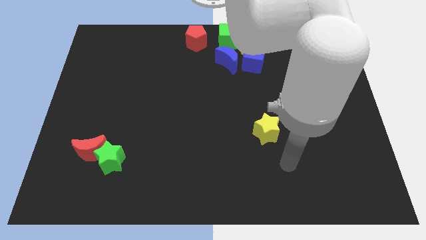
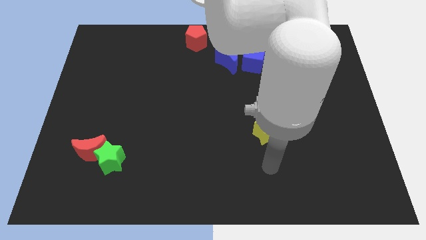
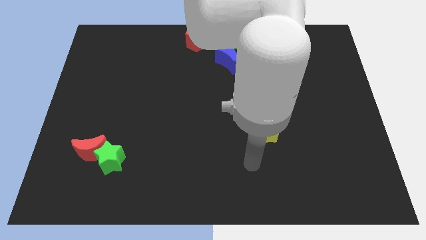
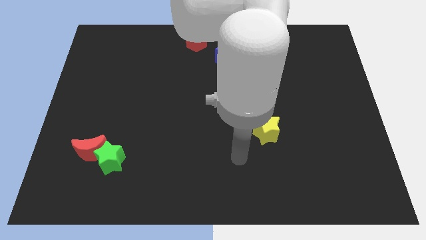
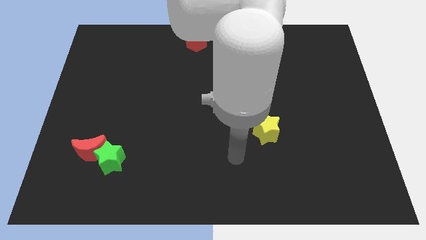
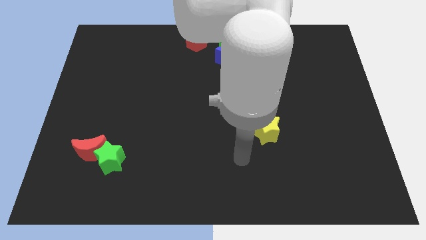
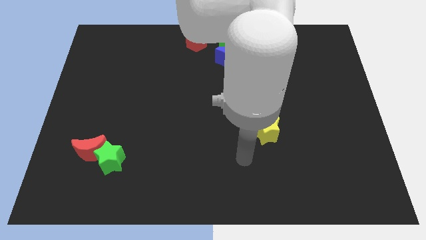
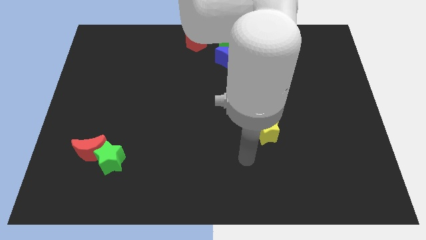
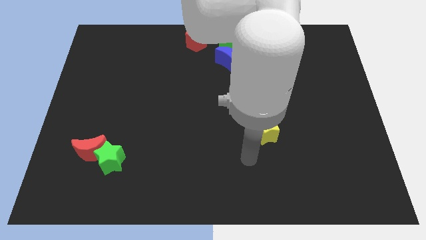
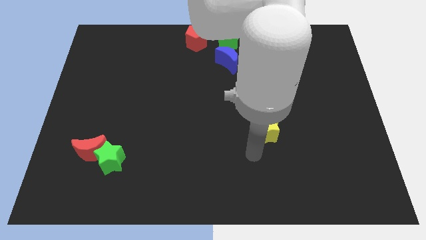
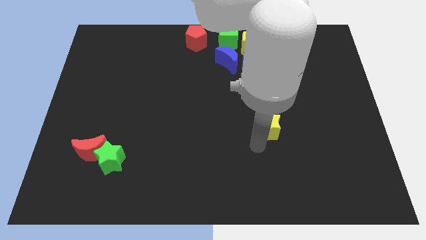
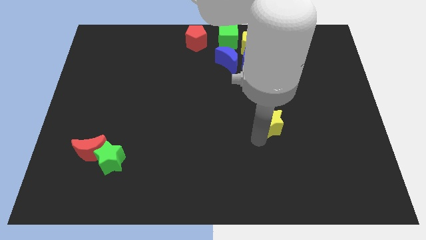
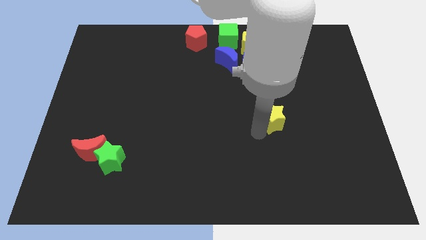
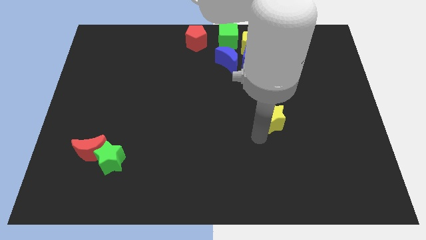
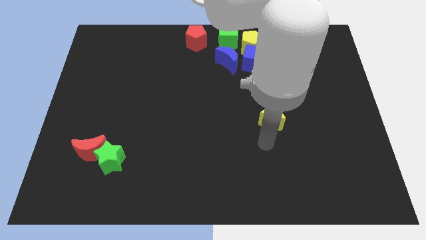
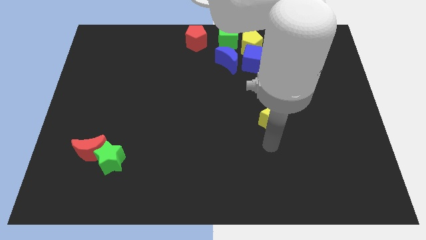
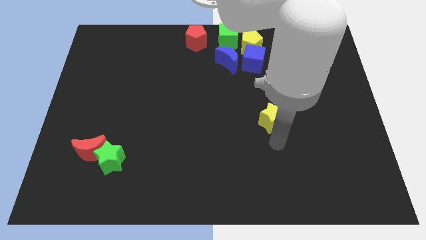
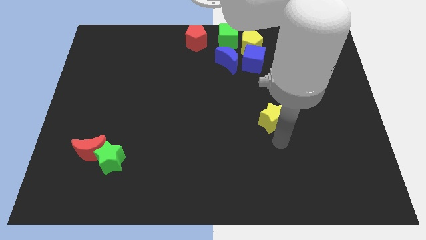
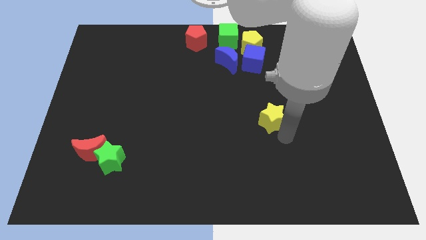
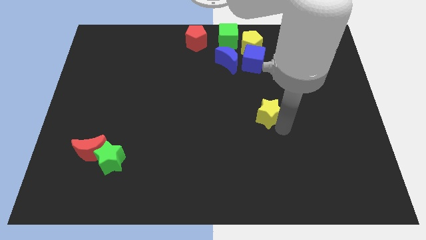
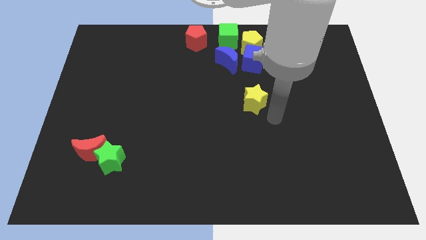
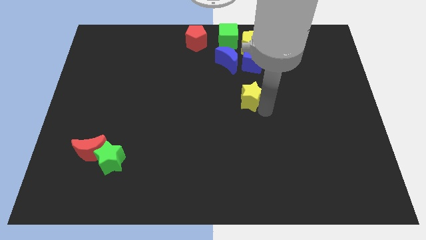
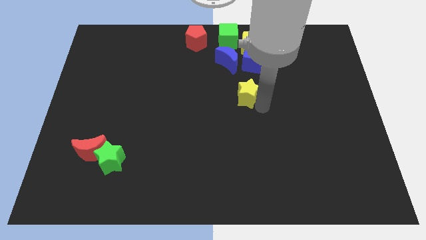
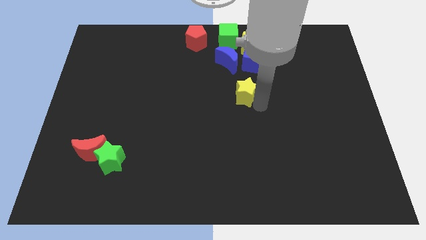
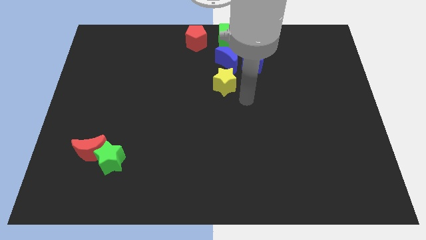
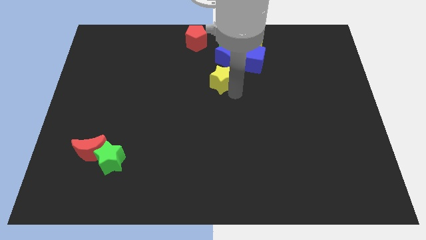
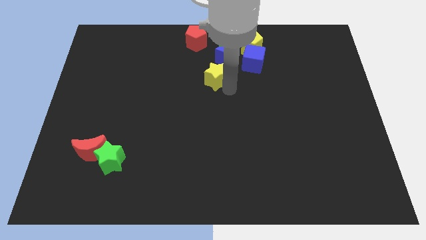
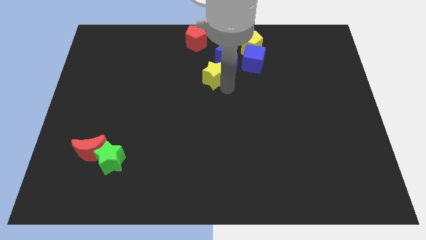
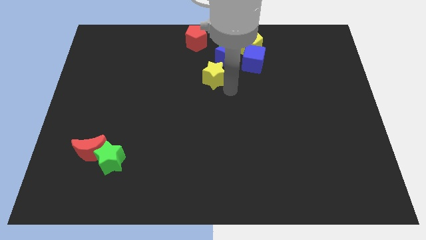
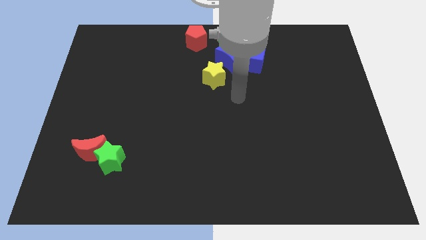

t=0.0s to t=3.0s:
place yellow star below blue crescent

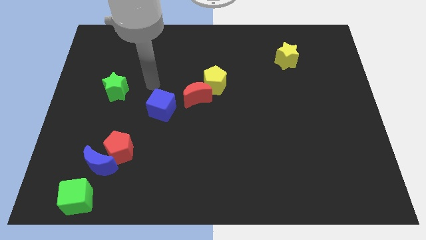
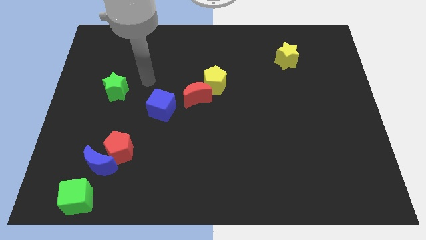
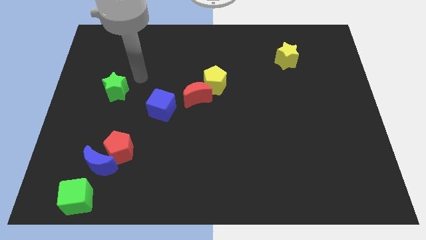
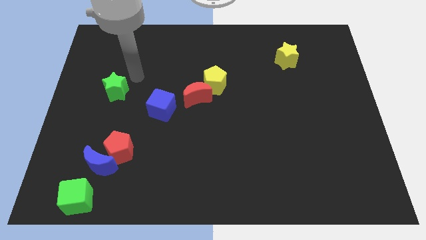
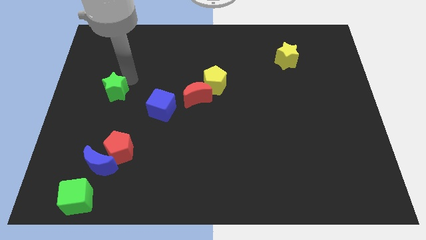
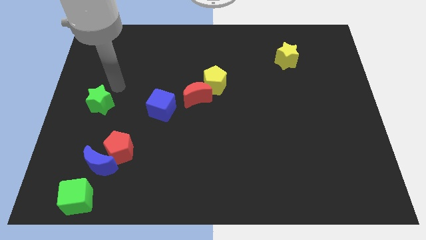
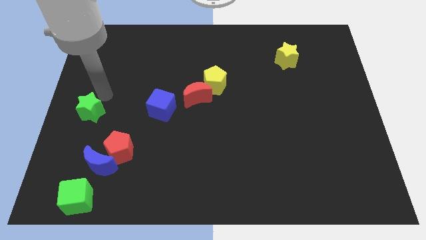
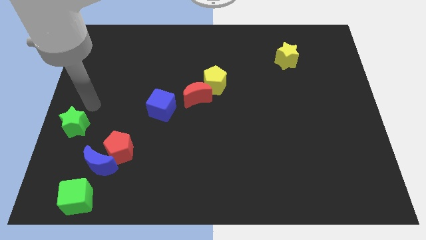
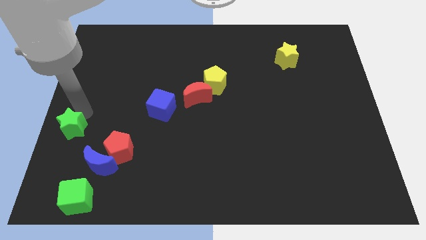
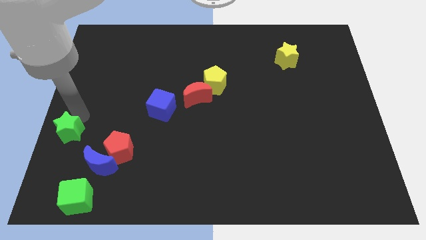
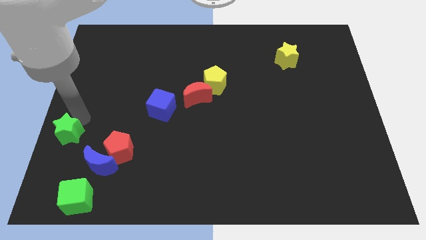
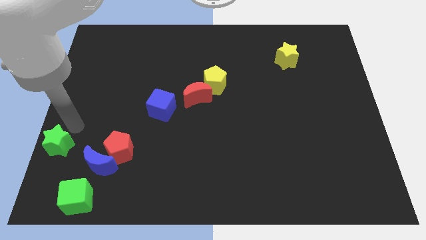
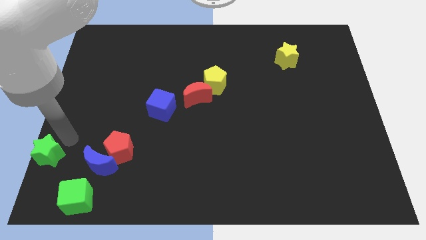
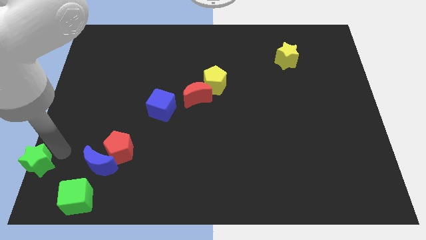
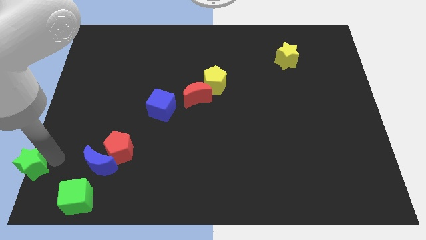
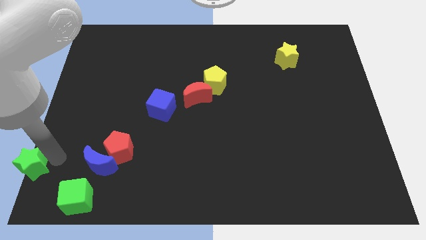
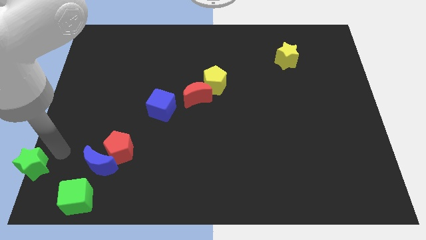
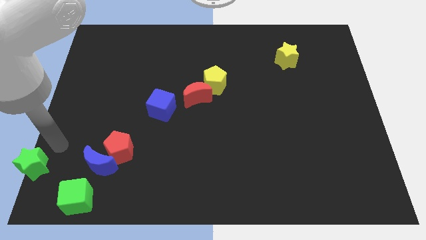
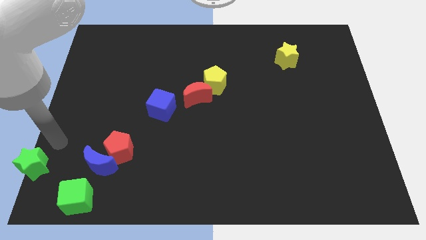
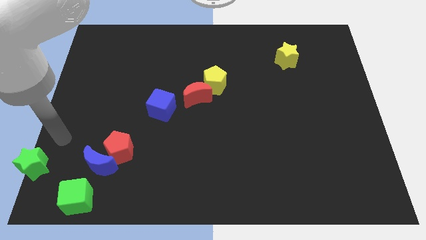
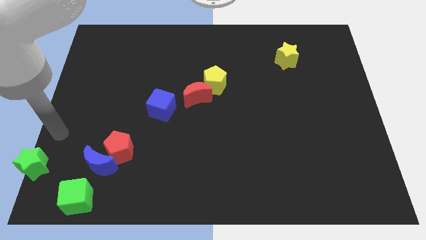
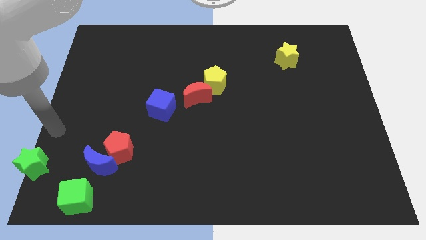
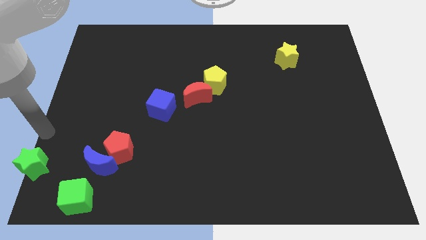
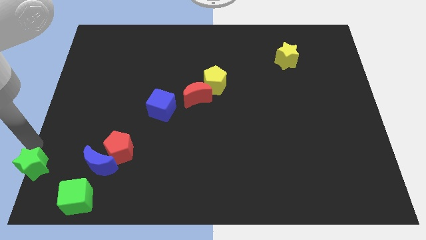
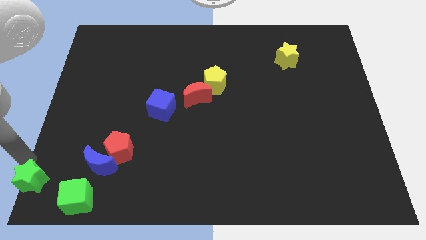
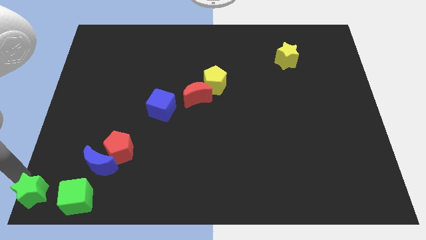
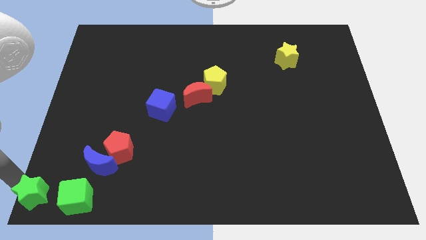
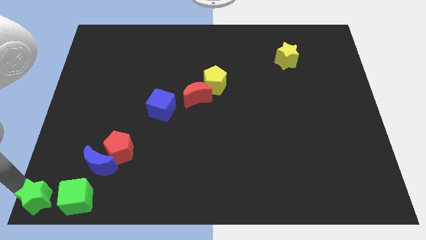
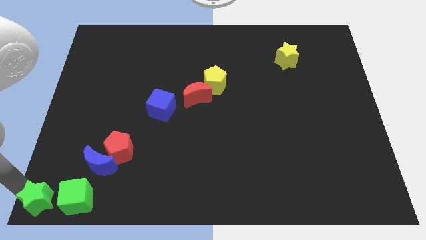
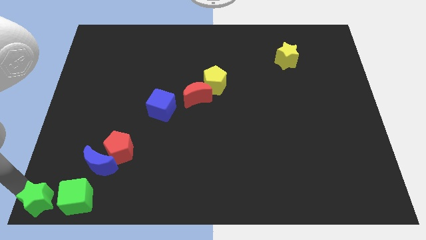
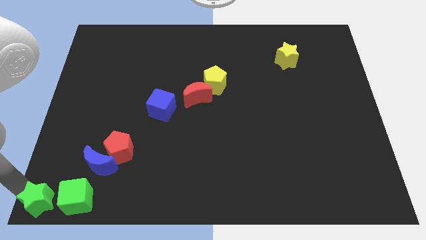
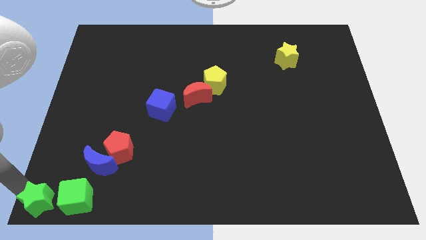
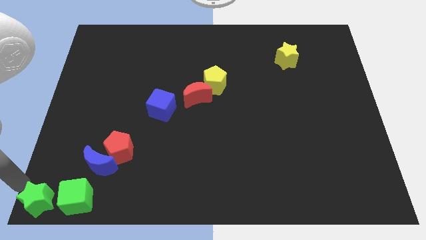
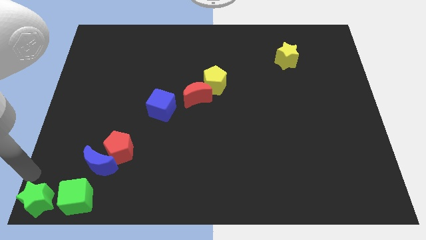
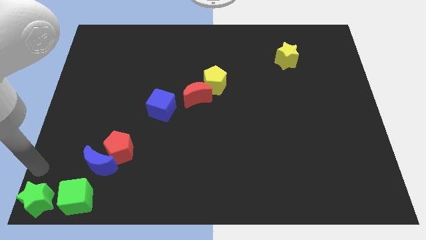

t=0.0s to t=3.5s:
move the green star to the left of green cube at the bottom left

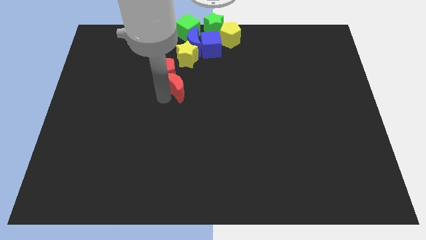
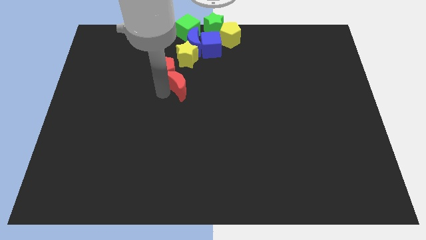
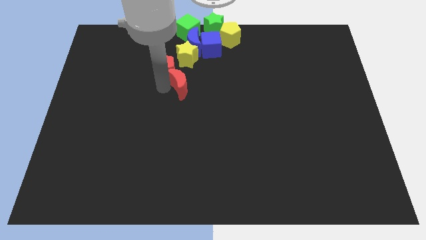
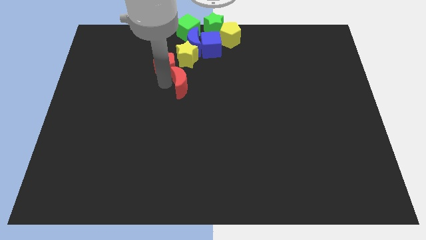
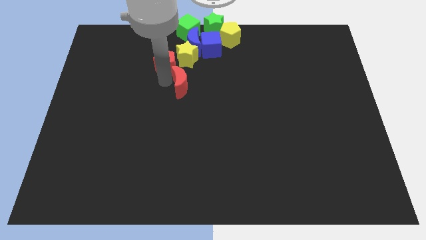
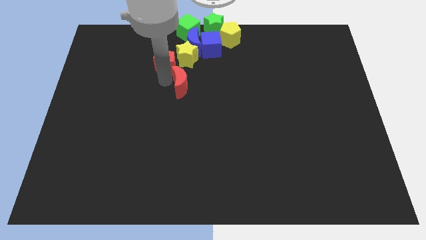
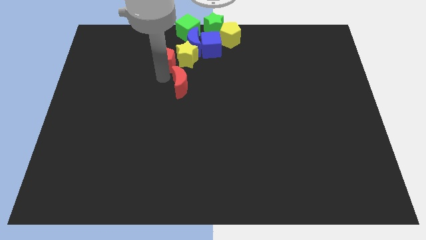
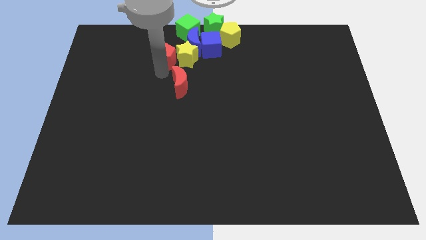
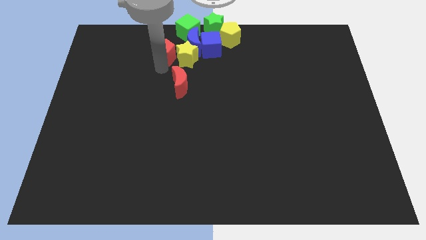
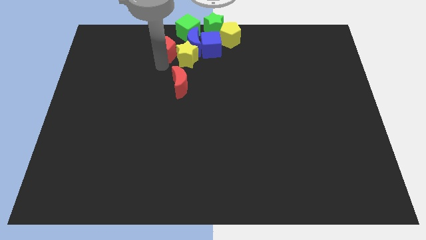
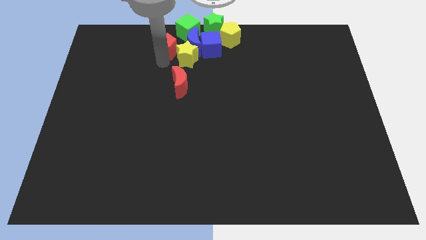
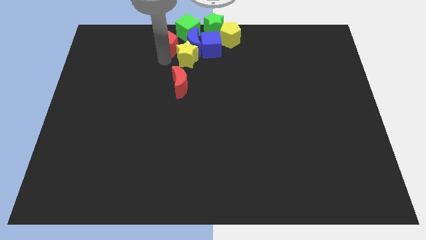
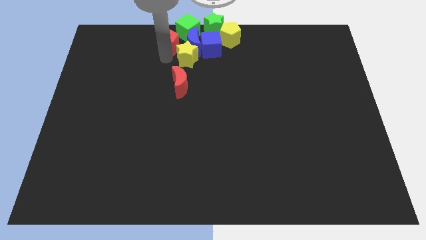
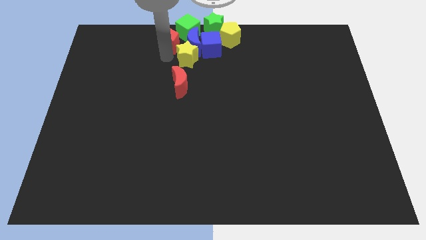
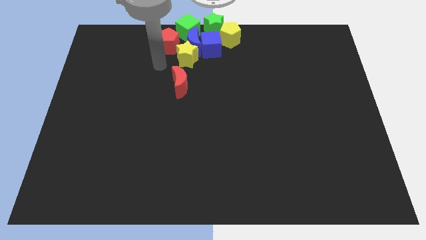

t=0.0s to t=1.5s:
push the red pentagon into the group of blocks

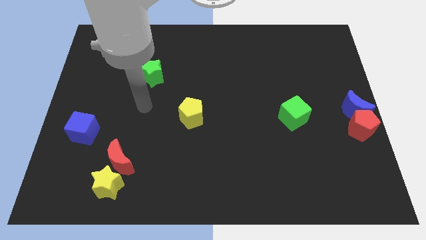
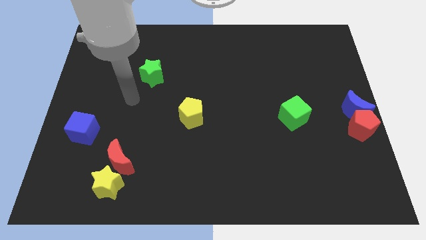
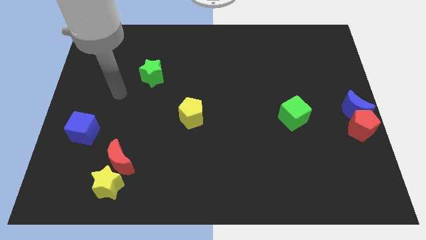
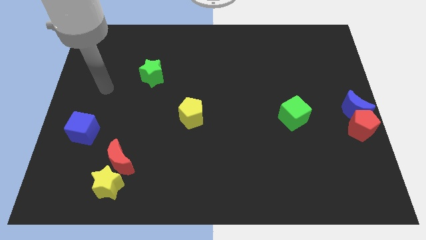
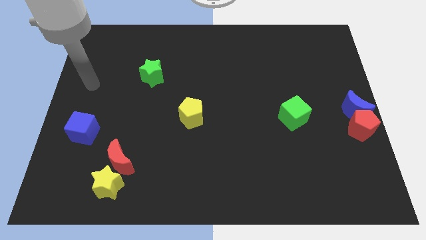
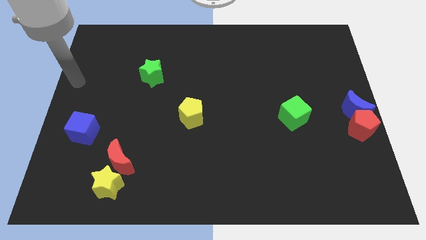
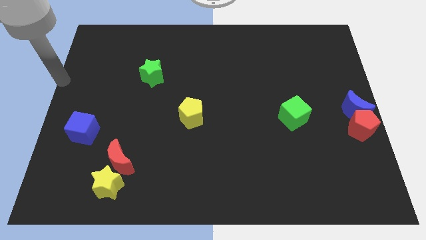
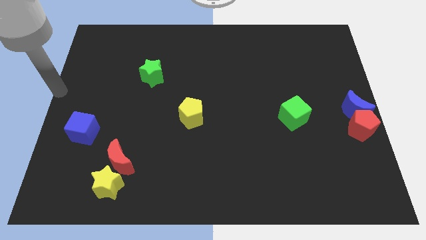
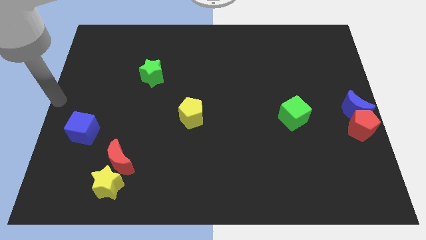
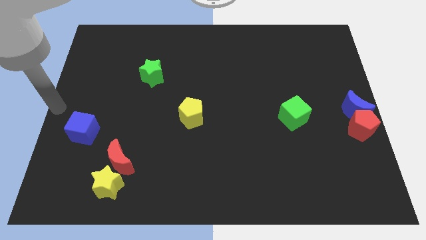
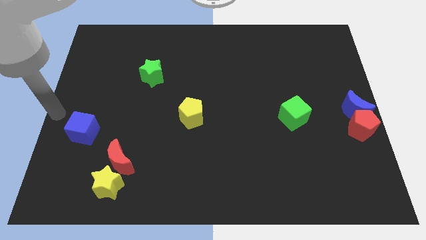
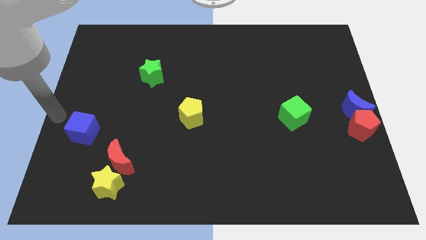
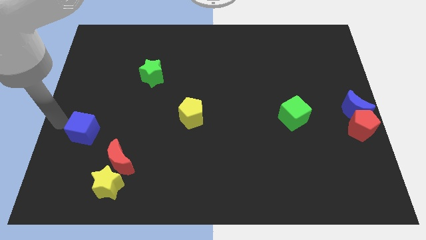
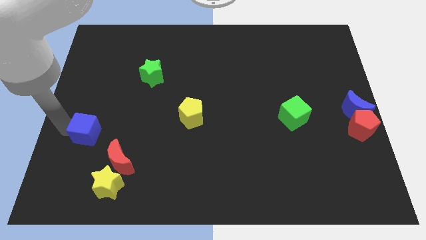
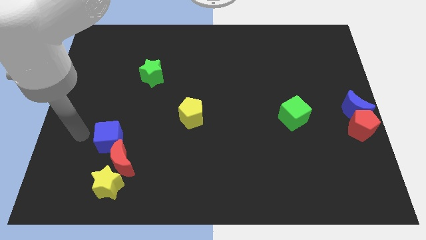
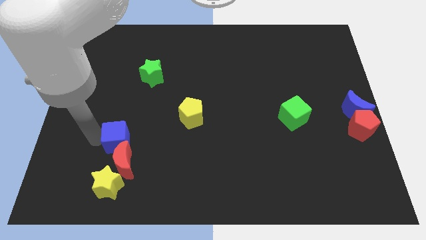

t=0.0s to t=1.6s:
push the blue cube into red crescent
